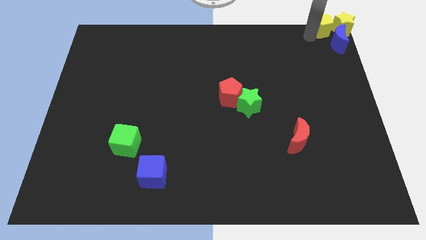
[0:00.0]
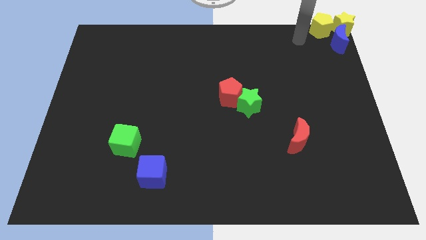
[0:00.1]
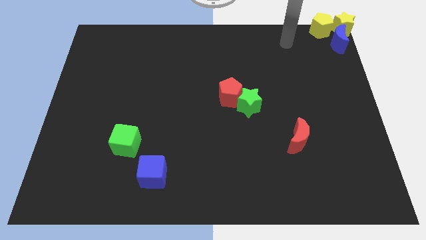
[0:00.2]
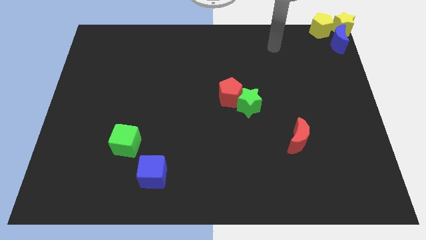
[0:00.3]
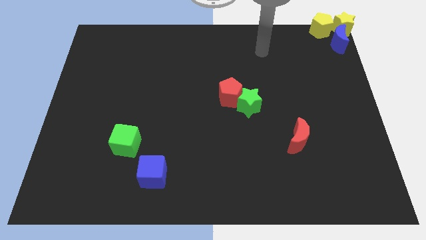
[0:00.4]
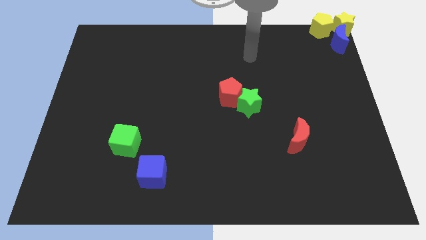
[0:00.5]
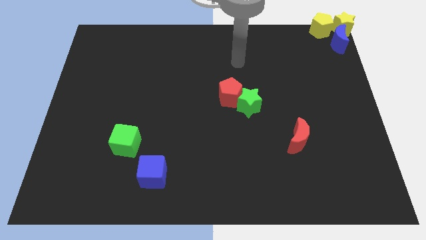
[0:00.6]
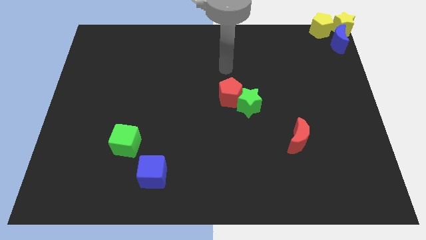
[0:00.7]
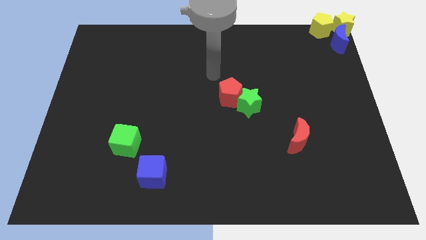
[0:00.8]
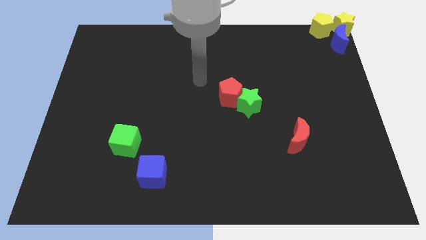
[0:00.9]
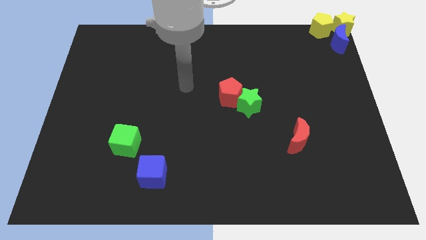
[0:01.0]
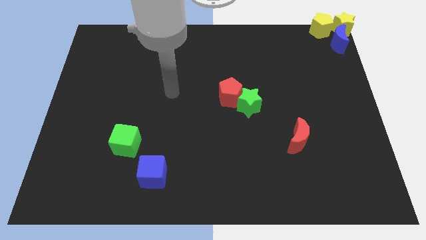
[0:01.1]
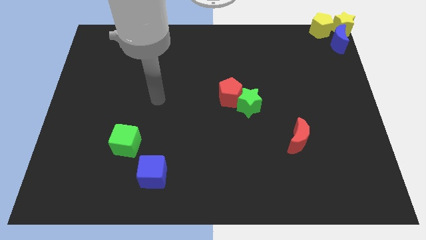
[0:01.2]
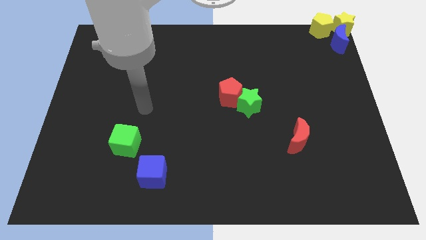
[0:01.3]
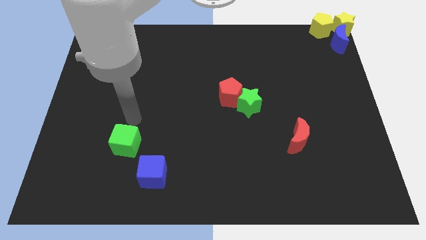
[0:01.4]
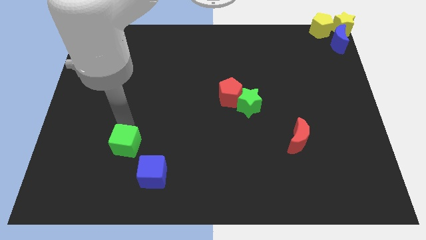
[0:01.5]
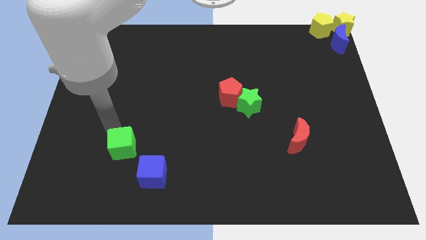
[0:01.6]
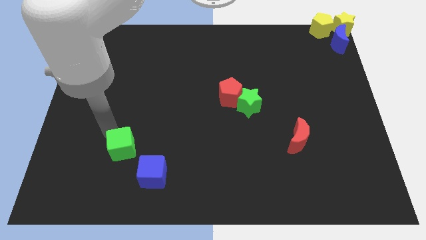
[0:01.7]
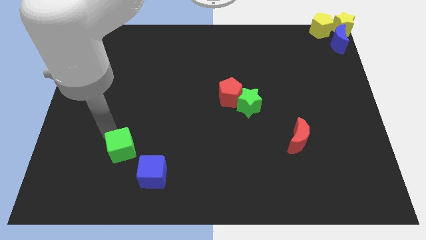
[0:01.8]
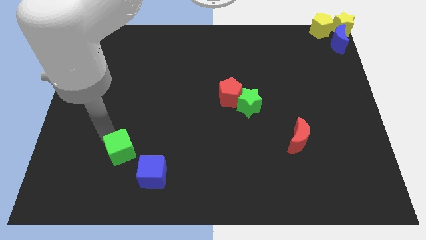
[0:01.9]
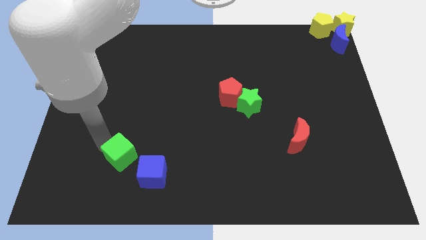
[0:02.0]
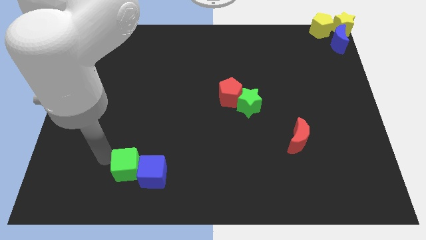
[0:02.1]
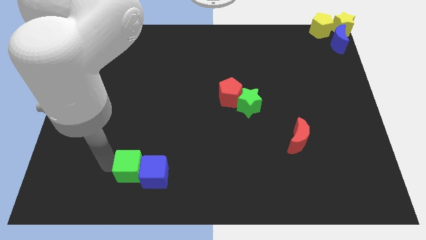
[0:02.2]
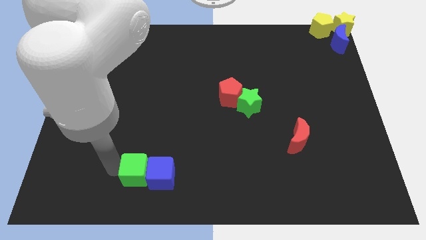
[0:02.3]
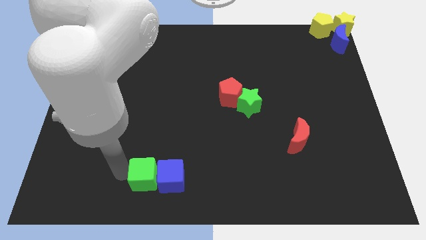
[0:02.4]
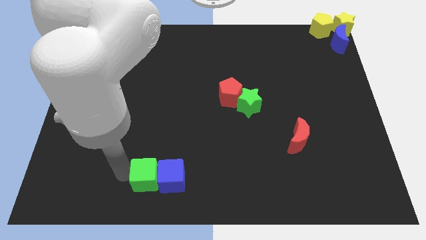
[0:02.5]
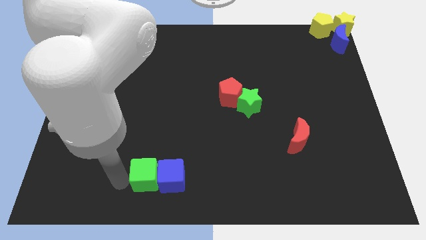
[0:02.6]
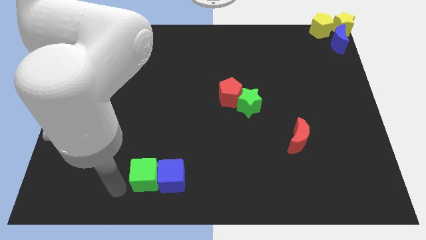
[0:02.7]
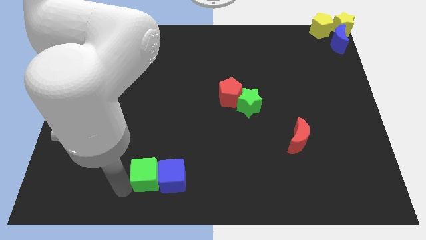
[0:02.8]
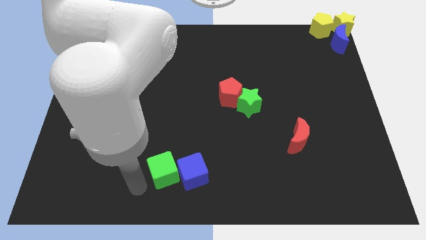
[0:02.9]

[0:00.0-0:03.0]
push the blue cube slightly with the green cube

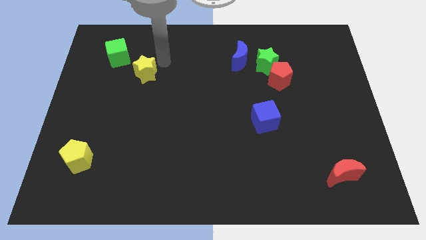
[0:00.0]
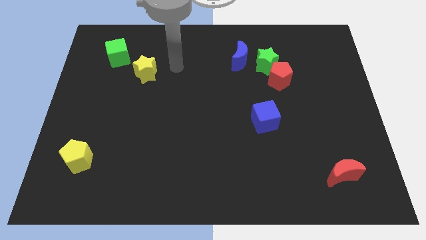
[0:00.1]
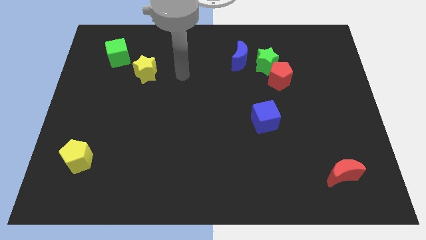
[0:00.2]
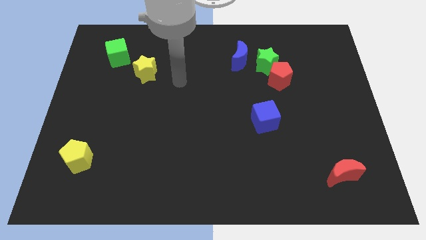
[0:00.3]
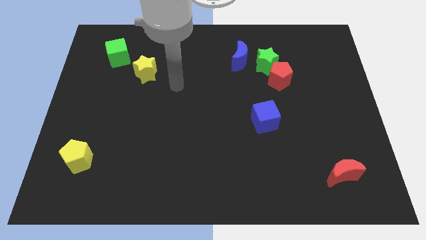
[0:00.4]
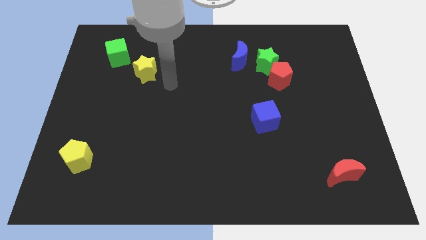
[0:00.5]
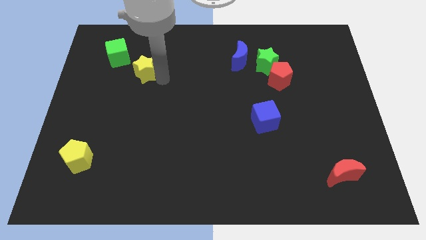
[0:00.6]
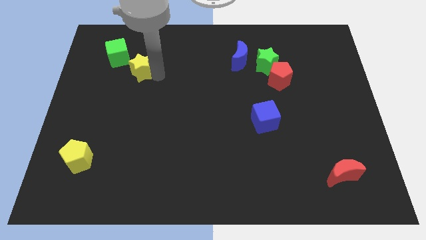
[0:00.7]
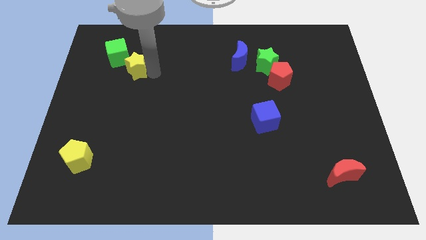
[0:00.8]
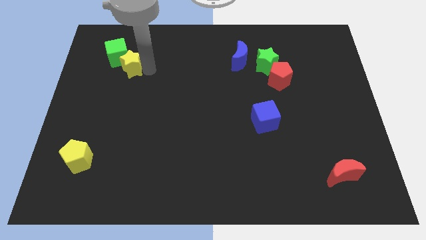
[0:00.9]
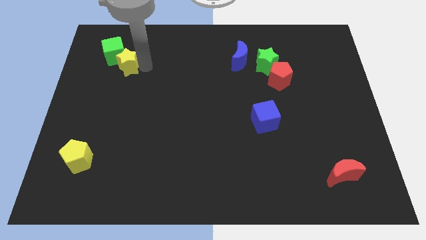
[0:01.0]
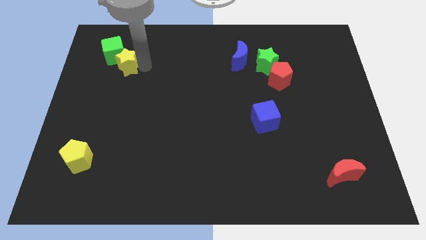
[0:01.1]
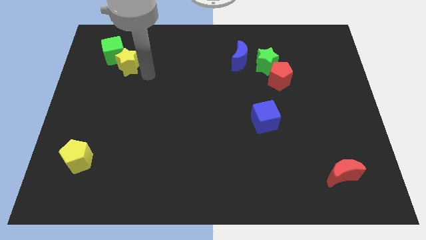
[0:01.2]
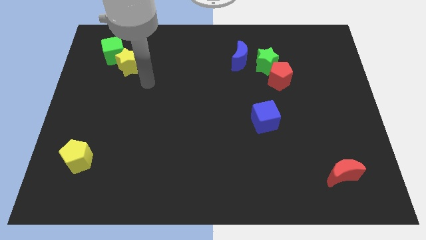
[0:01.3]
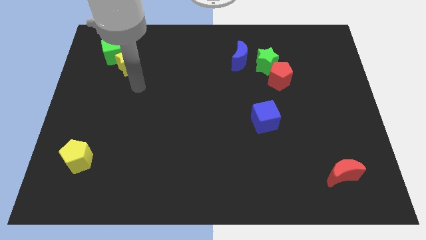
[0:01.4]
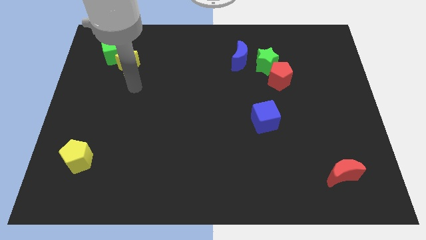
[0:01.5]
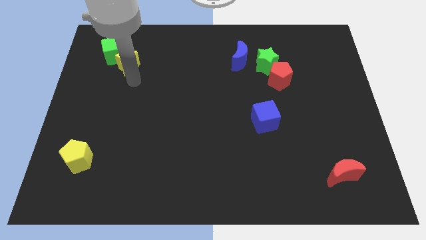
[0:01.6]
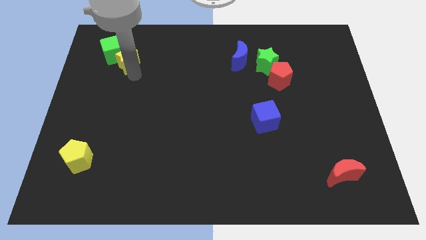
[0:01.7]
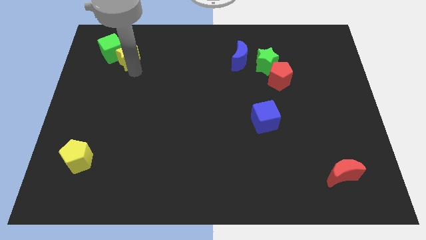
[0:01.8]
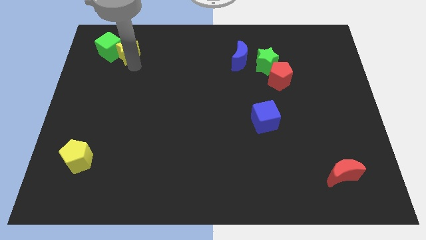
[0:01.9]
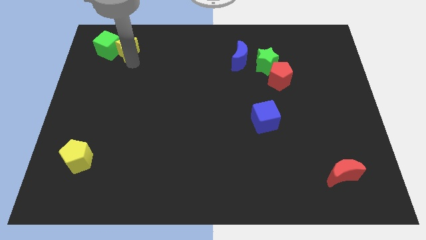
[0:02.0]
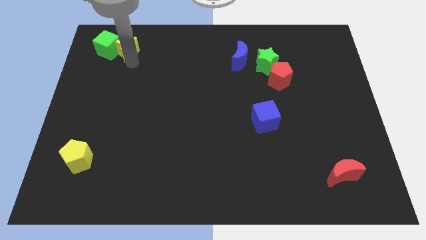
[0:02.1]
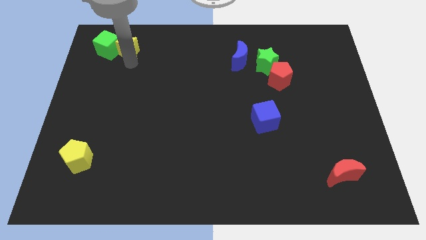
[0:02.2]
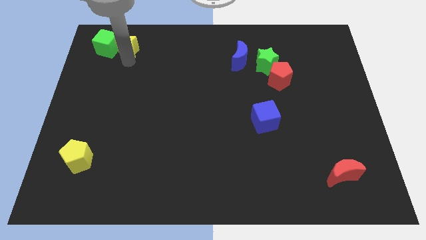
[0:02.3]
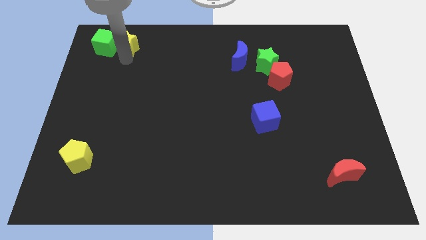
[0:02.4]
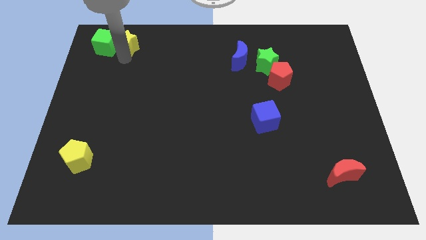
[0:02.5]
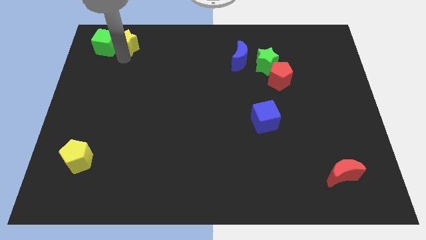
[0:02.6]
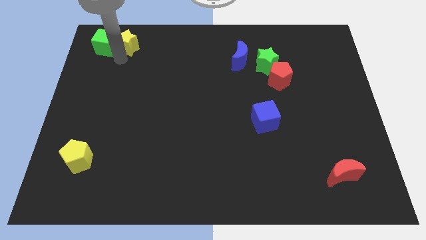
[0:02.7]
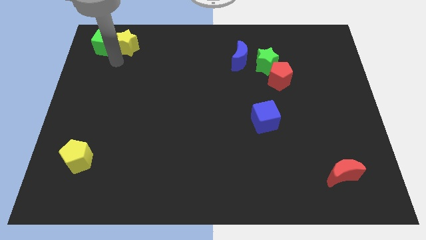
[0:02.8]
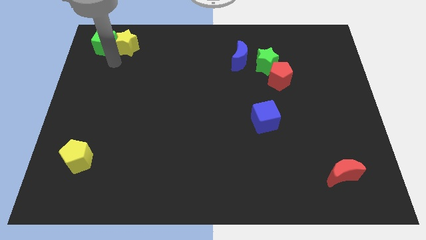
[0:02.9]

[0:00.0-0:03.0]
place yellow star beside green star

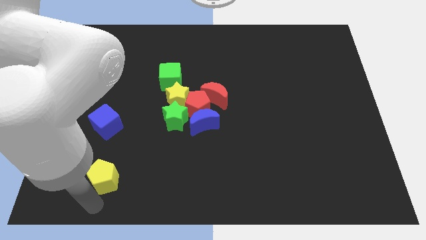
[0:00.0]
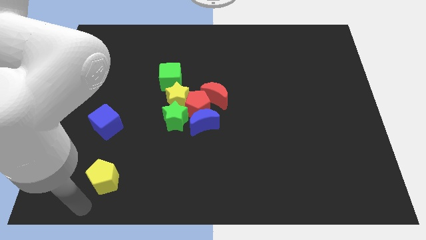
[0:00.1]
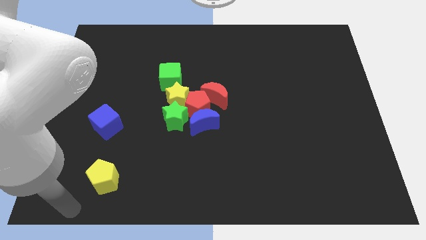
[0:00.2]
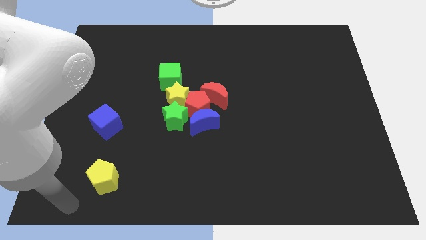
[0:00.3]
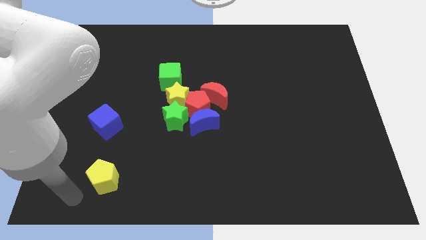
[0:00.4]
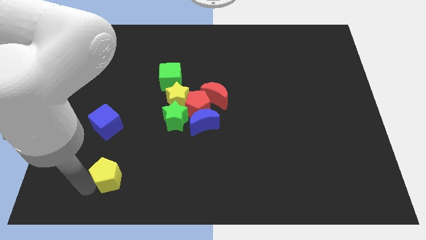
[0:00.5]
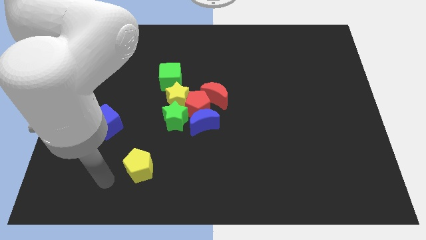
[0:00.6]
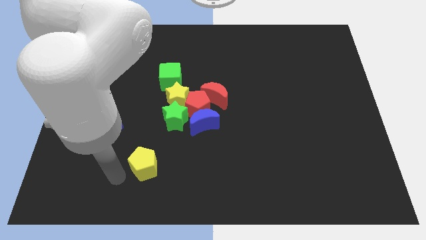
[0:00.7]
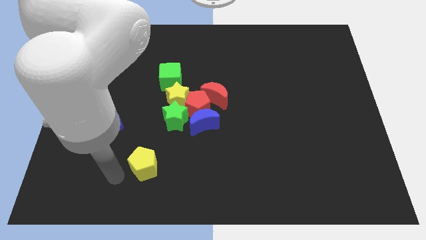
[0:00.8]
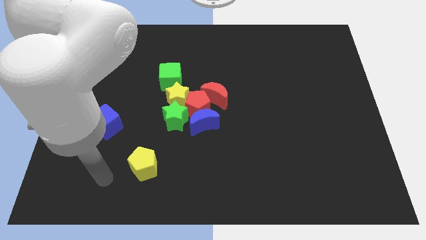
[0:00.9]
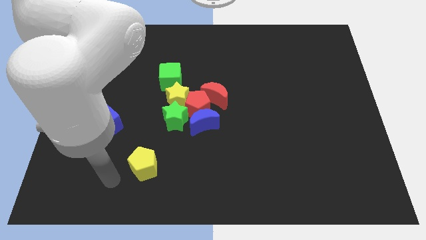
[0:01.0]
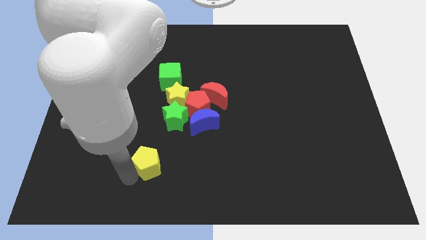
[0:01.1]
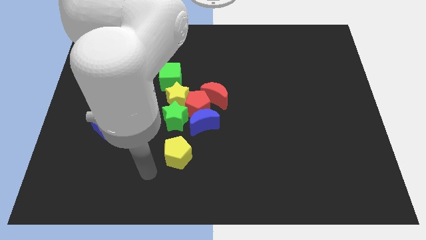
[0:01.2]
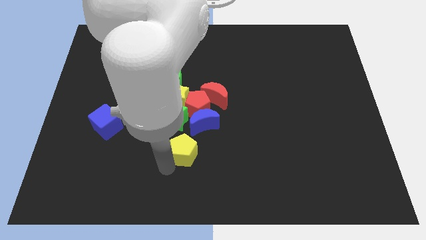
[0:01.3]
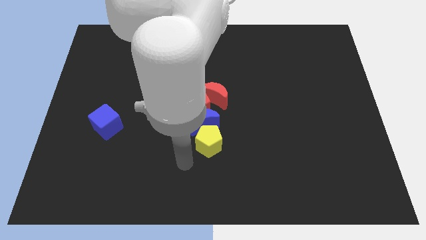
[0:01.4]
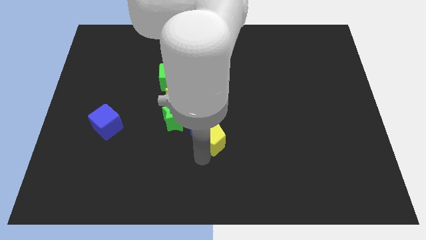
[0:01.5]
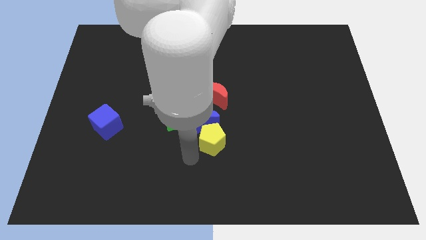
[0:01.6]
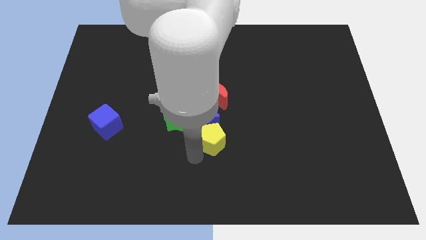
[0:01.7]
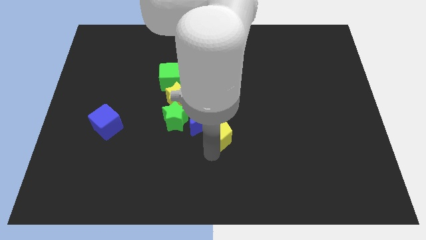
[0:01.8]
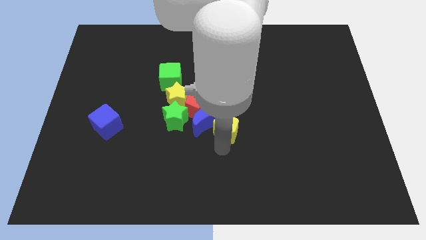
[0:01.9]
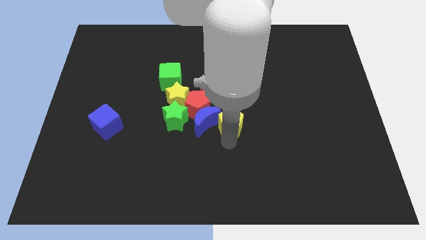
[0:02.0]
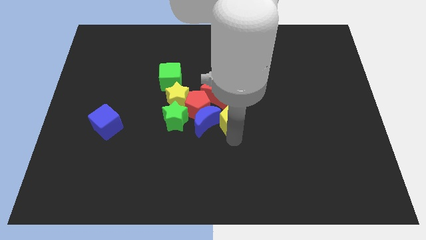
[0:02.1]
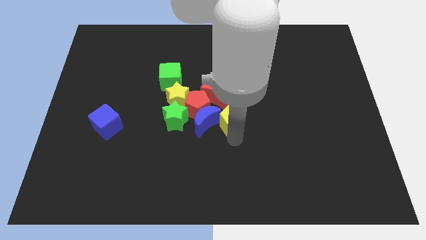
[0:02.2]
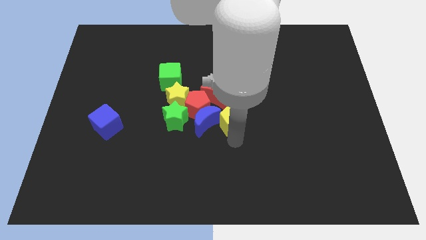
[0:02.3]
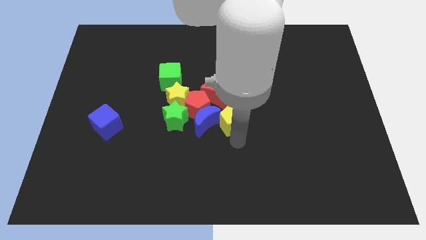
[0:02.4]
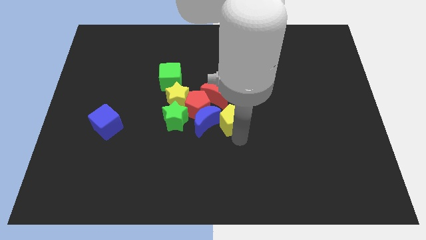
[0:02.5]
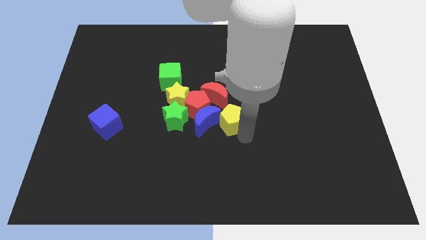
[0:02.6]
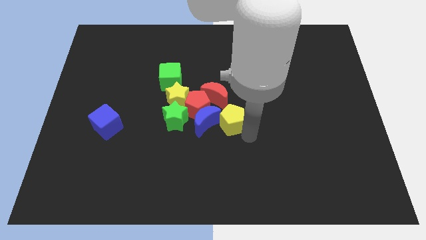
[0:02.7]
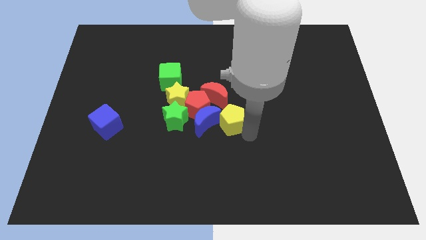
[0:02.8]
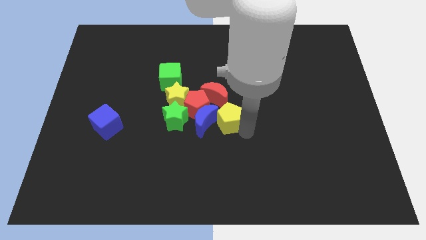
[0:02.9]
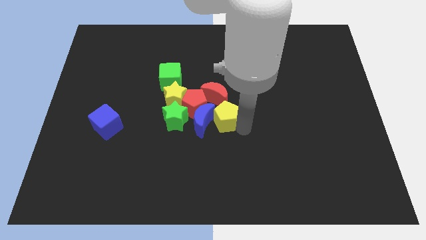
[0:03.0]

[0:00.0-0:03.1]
put the yellow pentagon to the right of the blue moon
